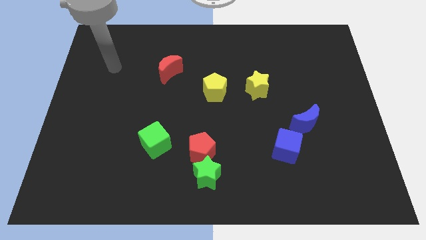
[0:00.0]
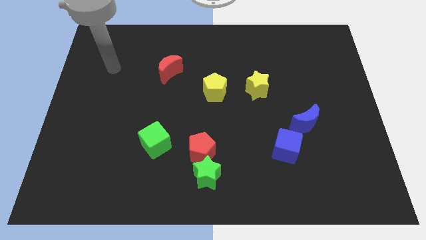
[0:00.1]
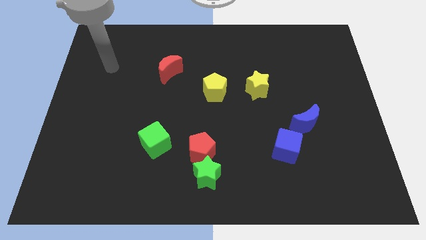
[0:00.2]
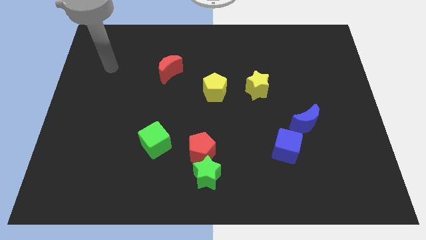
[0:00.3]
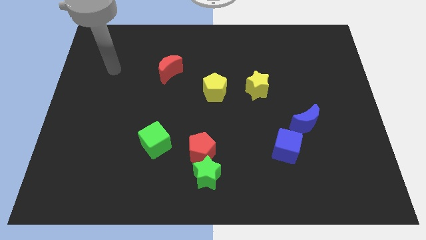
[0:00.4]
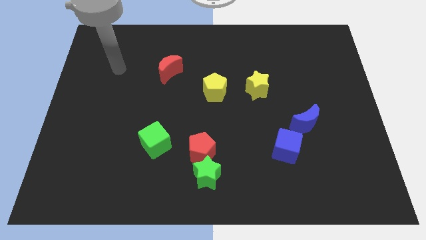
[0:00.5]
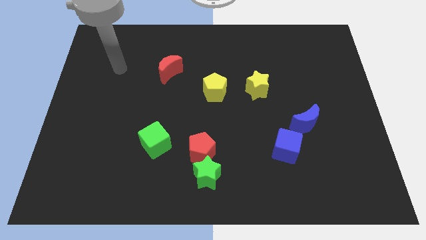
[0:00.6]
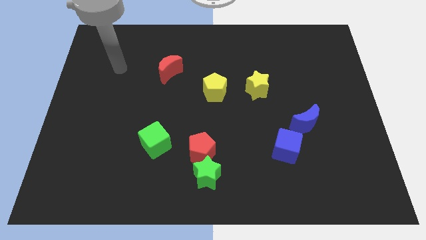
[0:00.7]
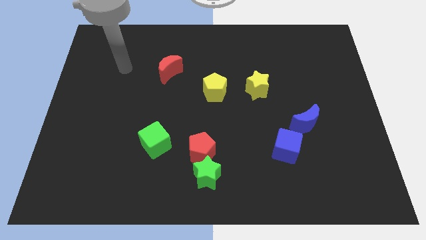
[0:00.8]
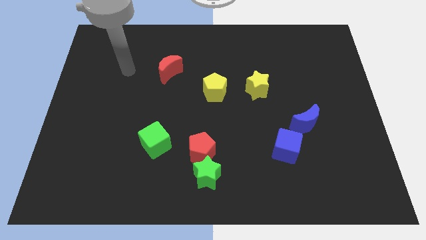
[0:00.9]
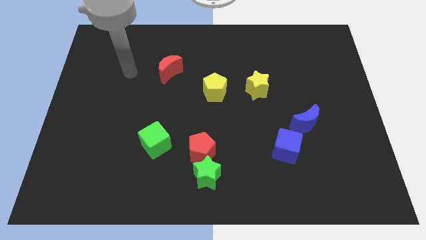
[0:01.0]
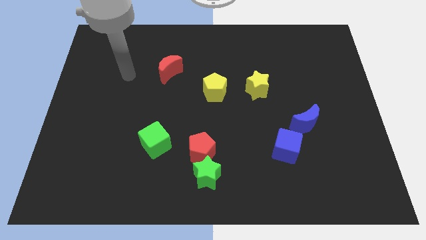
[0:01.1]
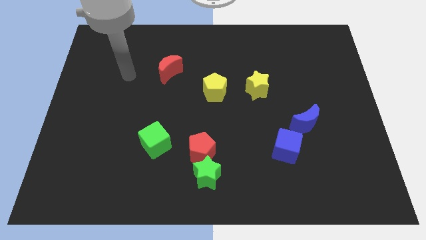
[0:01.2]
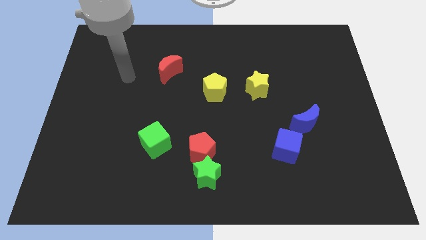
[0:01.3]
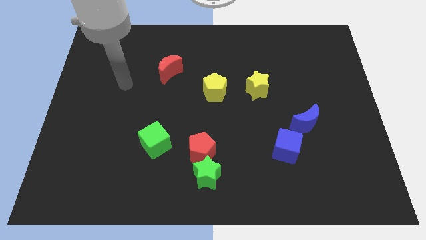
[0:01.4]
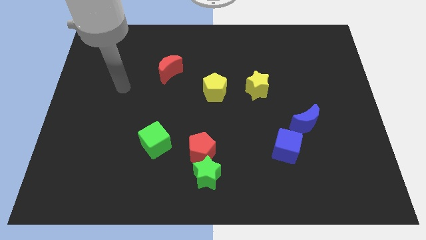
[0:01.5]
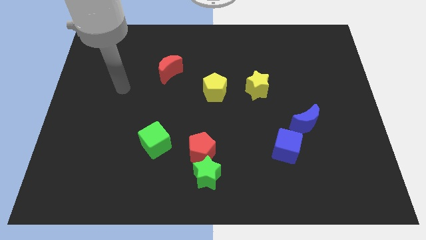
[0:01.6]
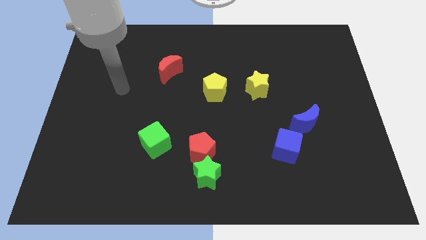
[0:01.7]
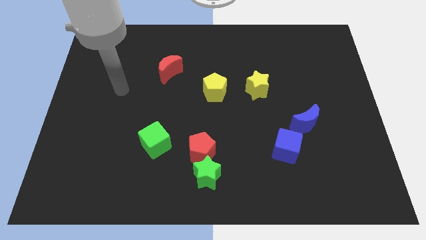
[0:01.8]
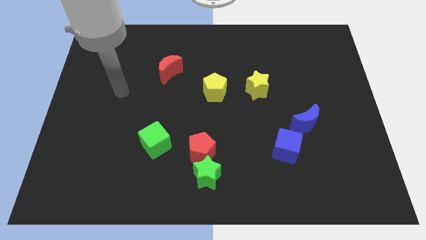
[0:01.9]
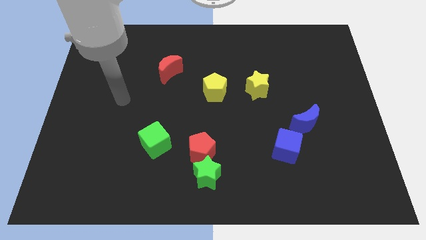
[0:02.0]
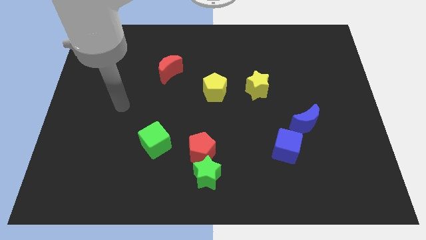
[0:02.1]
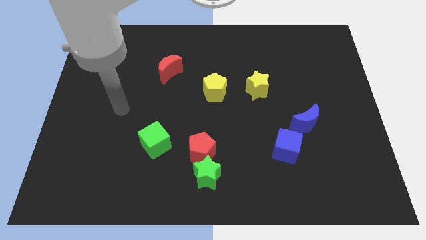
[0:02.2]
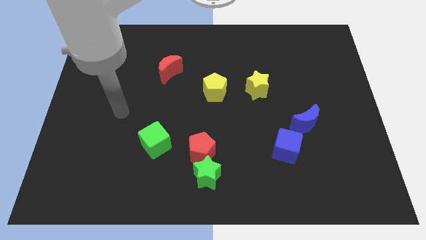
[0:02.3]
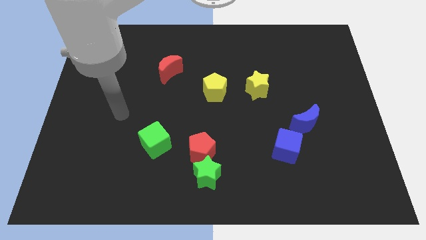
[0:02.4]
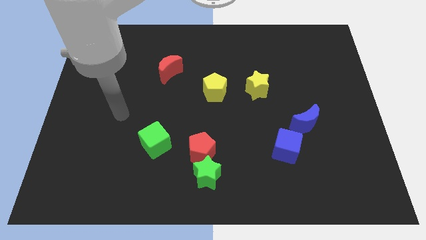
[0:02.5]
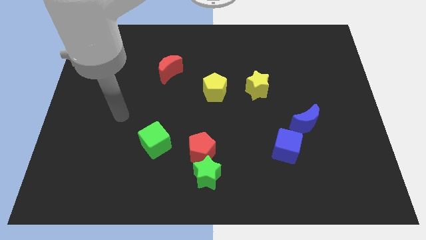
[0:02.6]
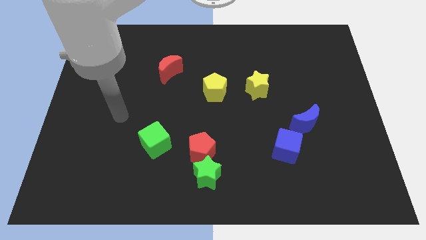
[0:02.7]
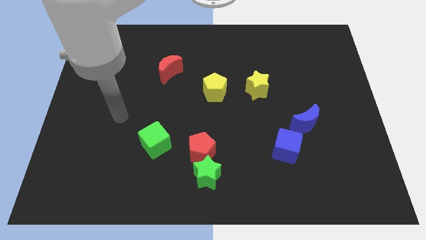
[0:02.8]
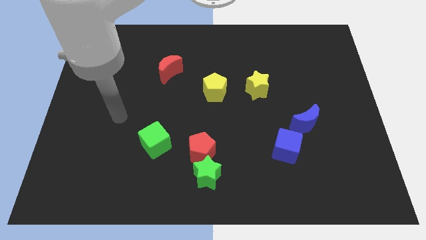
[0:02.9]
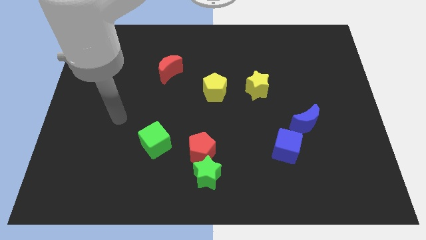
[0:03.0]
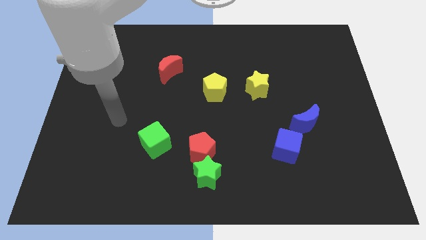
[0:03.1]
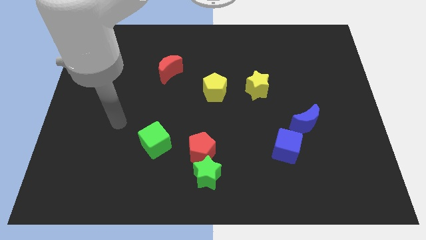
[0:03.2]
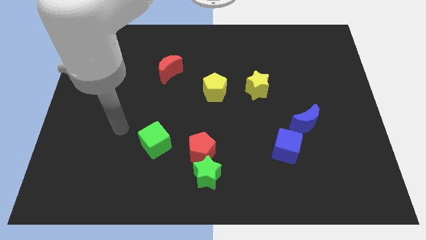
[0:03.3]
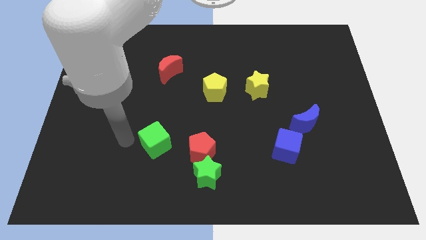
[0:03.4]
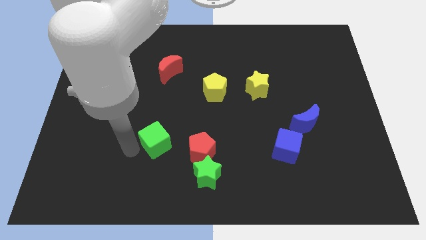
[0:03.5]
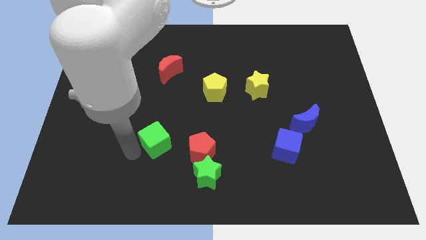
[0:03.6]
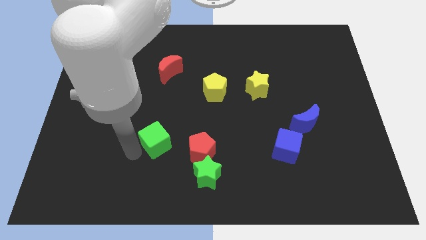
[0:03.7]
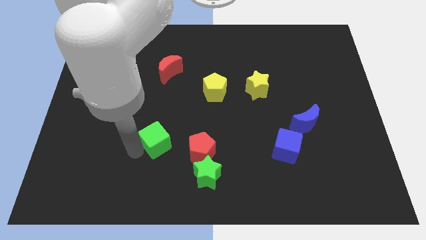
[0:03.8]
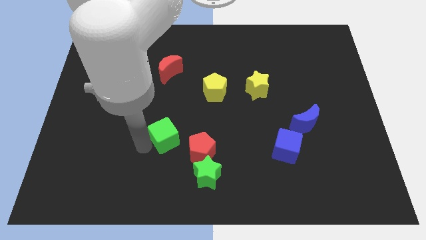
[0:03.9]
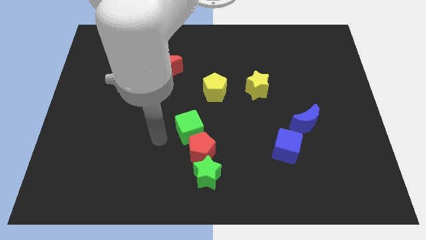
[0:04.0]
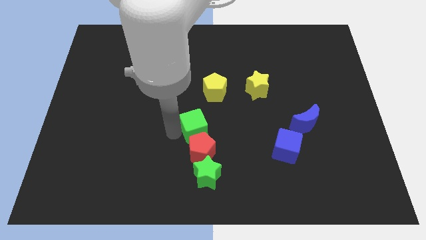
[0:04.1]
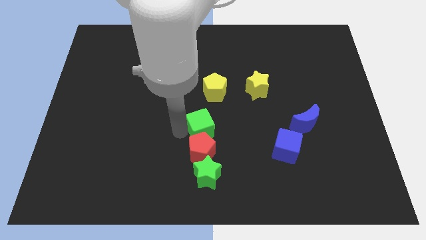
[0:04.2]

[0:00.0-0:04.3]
move the green cube to the top of the red pentagon

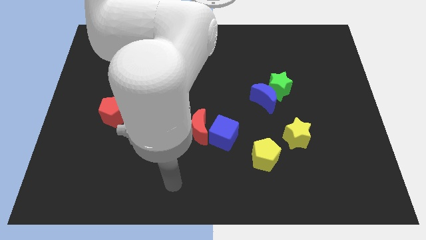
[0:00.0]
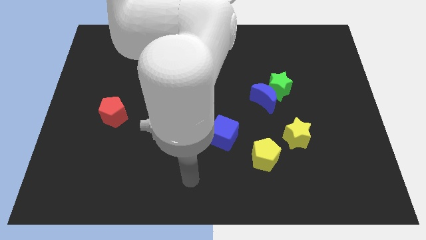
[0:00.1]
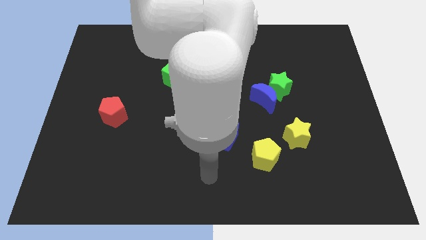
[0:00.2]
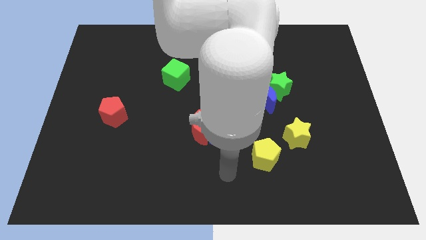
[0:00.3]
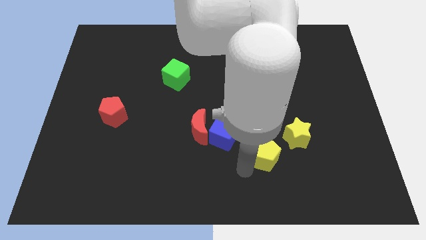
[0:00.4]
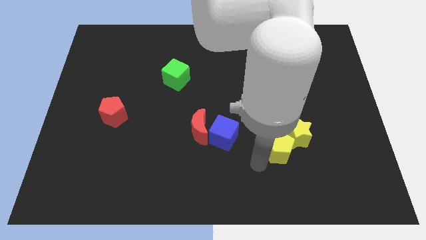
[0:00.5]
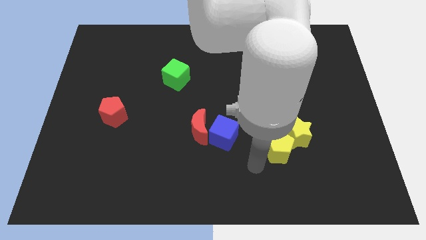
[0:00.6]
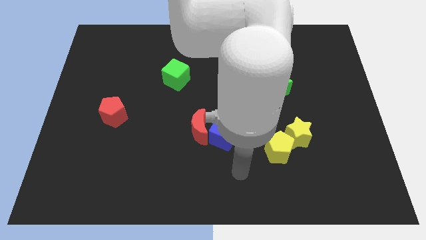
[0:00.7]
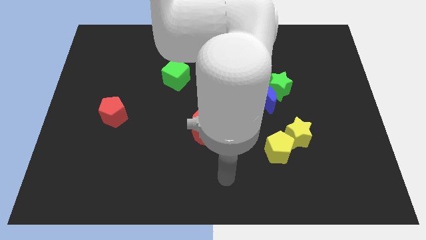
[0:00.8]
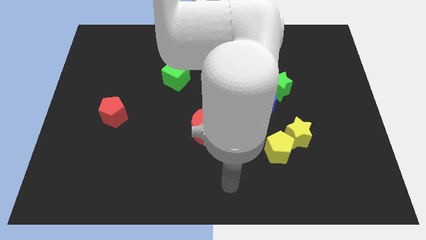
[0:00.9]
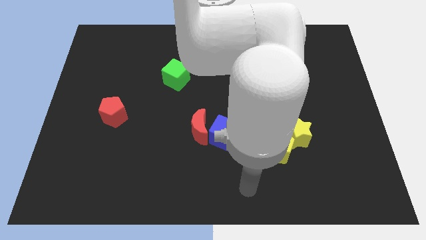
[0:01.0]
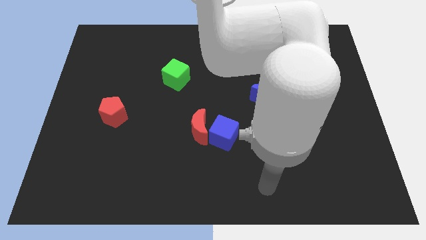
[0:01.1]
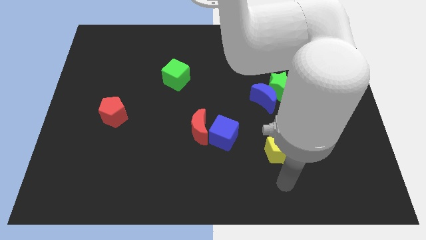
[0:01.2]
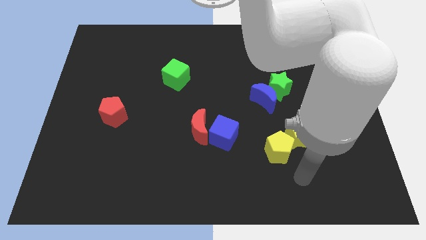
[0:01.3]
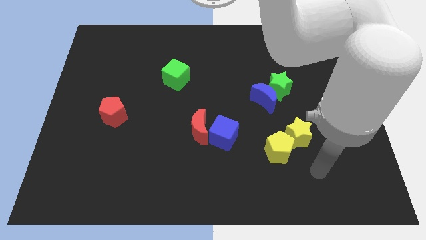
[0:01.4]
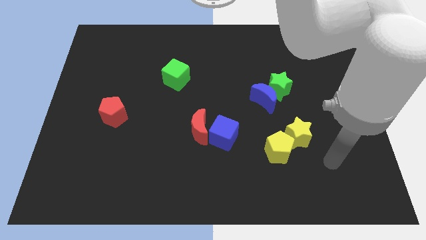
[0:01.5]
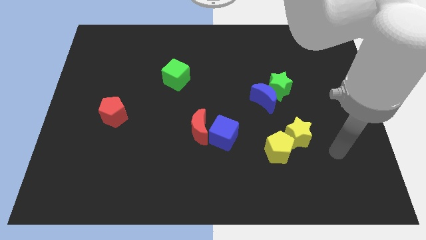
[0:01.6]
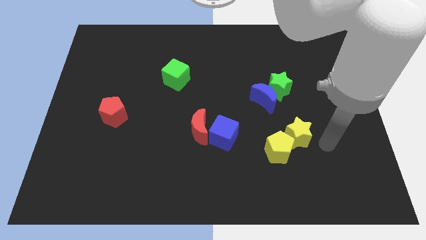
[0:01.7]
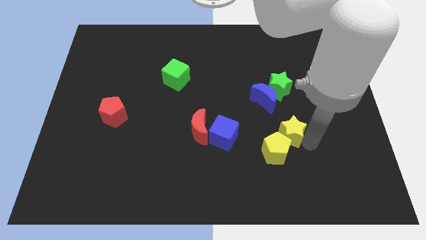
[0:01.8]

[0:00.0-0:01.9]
slightly move the yellow pentagon into the yellow star

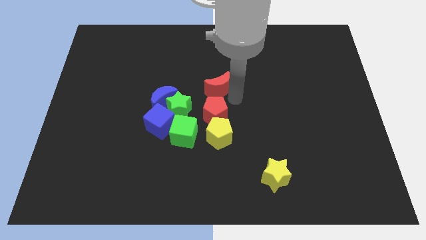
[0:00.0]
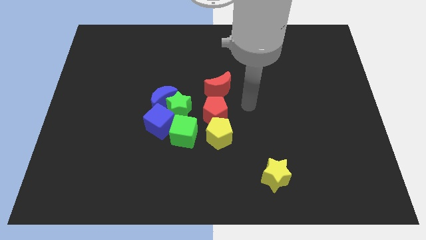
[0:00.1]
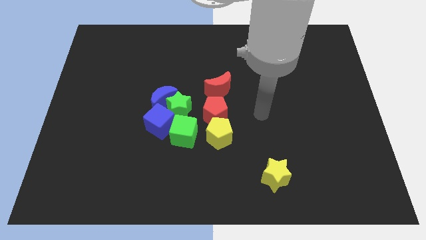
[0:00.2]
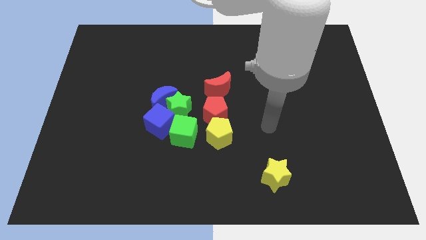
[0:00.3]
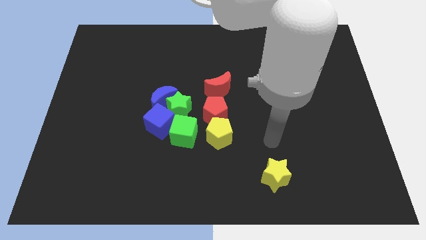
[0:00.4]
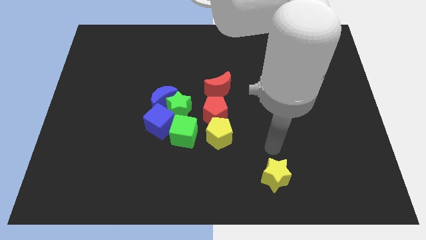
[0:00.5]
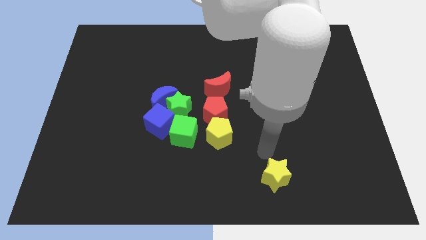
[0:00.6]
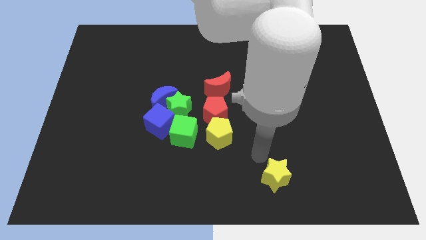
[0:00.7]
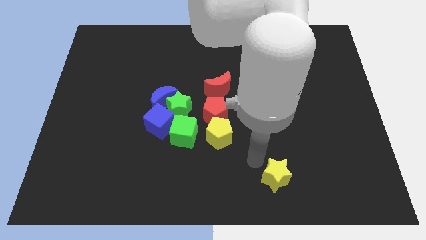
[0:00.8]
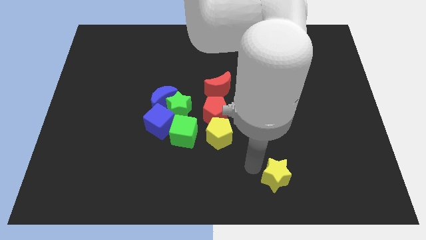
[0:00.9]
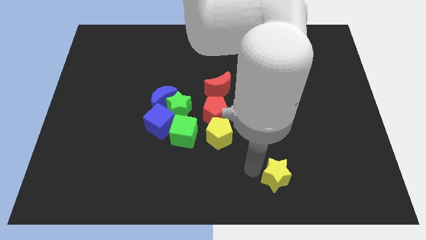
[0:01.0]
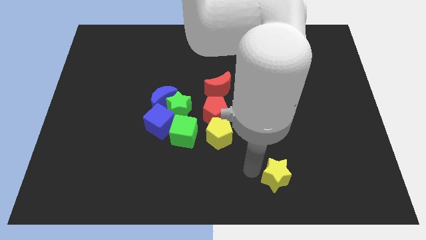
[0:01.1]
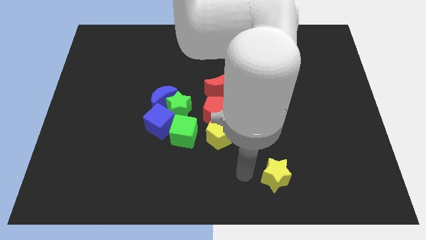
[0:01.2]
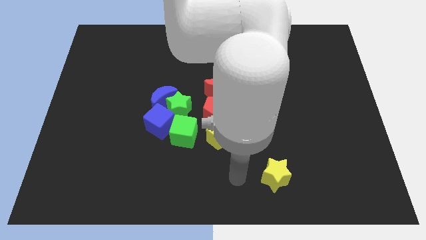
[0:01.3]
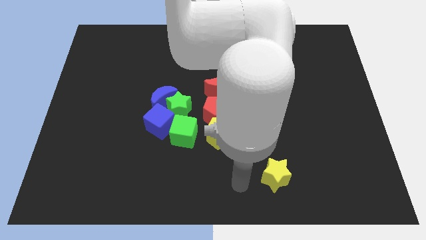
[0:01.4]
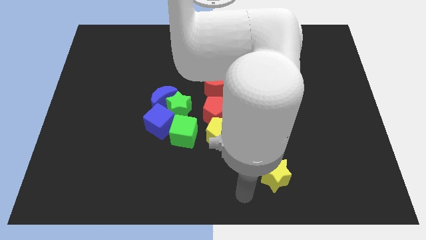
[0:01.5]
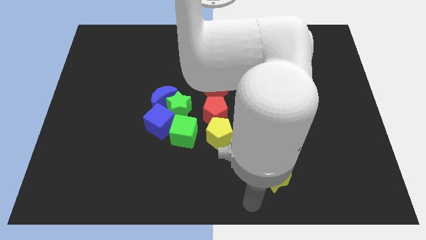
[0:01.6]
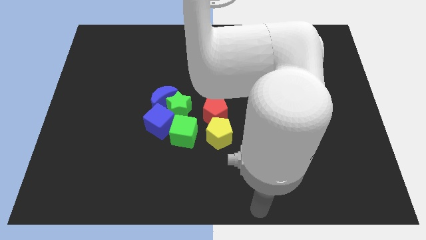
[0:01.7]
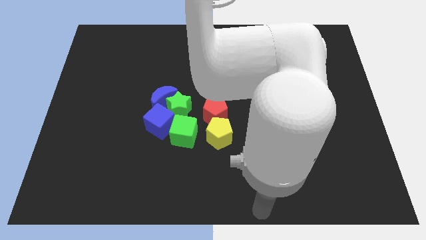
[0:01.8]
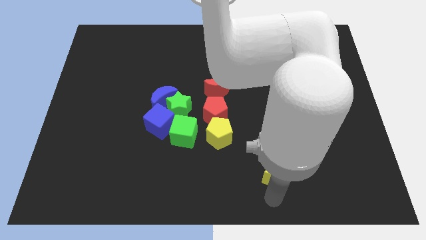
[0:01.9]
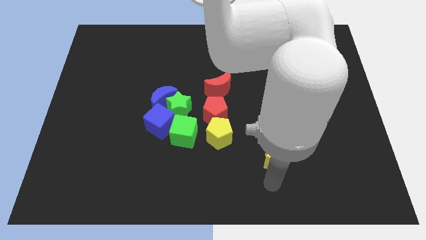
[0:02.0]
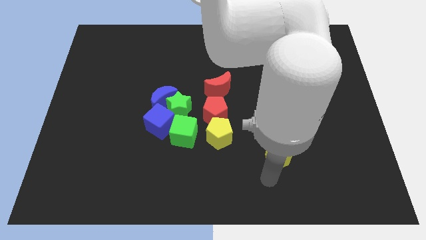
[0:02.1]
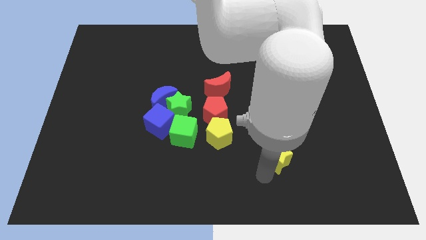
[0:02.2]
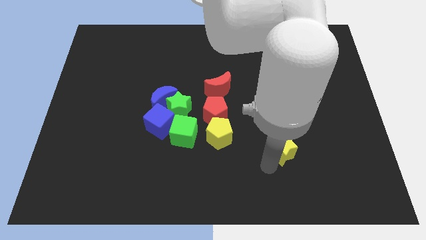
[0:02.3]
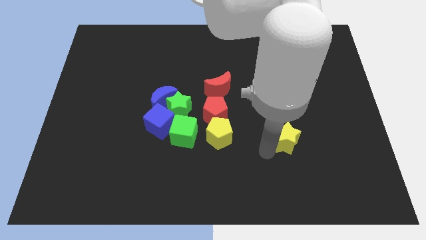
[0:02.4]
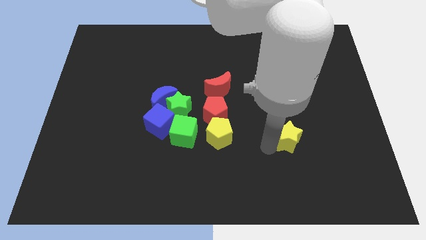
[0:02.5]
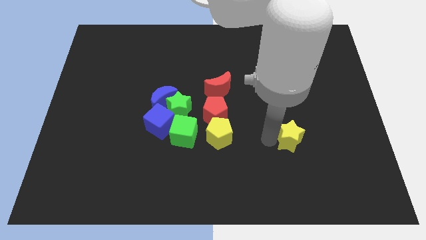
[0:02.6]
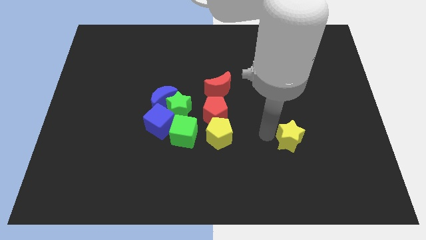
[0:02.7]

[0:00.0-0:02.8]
drag the yellow star to the right of the yellow pentagon
